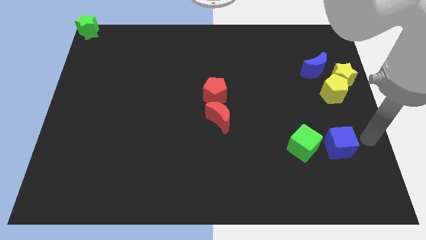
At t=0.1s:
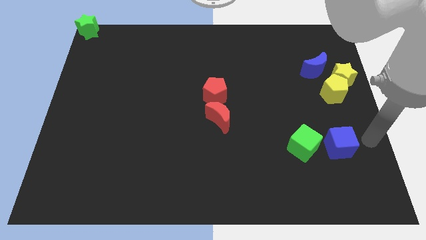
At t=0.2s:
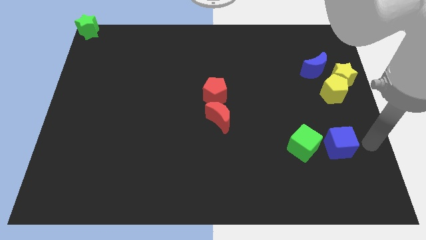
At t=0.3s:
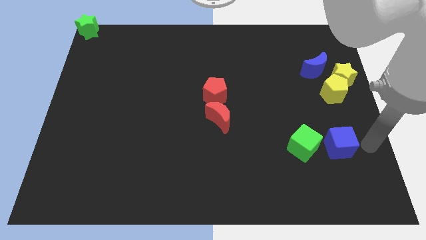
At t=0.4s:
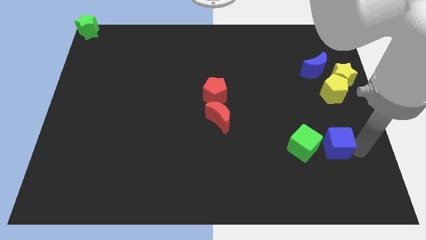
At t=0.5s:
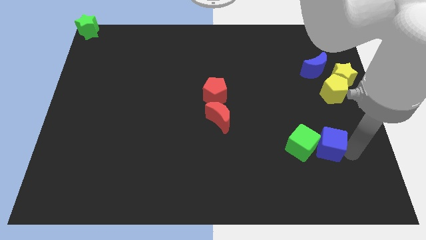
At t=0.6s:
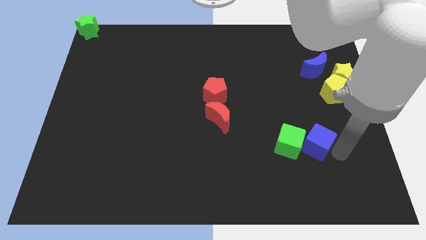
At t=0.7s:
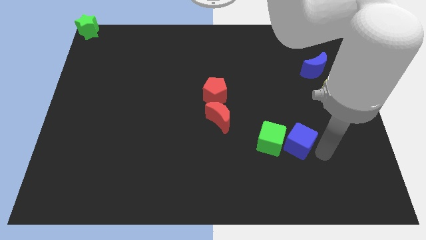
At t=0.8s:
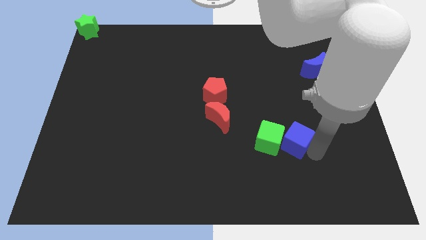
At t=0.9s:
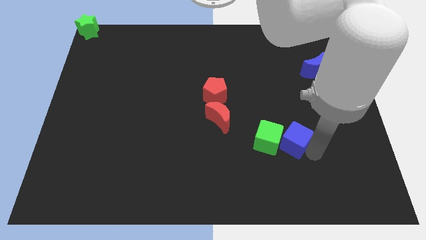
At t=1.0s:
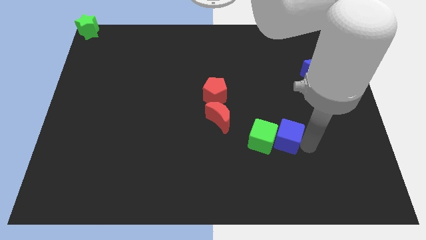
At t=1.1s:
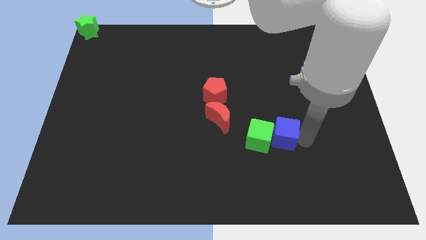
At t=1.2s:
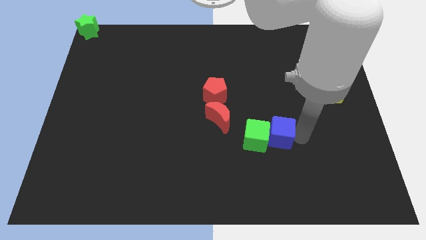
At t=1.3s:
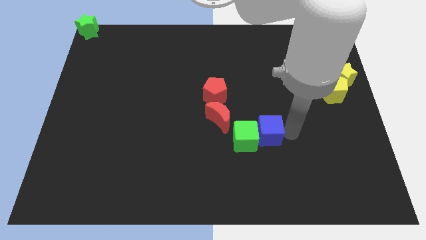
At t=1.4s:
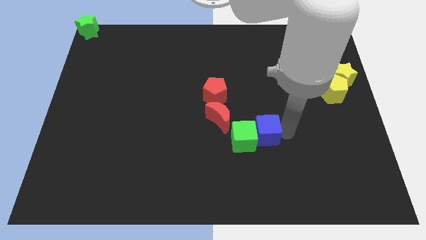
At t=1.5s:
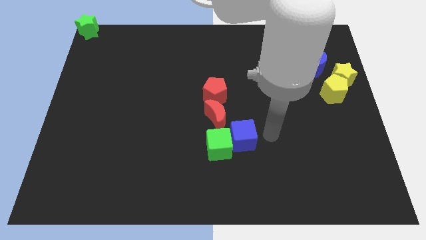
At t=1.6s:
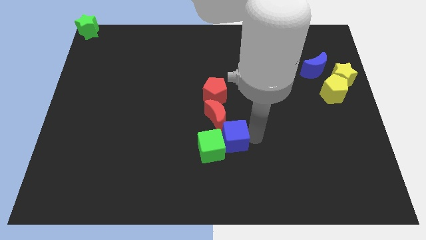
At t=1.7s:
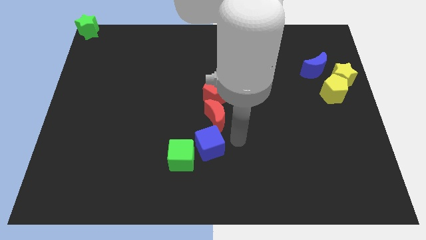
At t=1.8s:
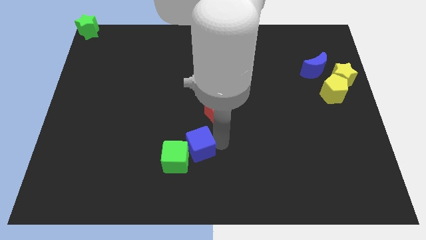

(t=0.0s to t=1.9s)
push the green cube to the left of the board with the blue cube

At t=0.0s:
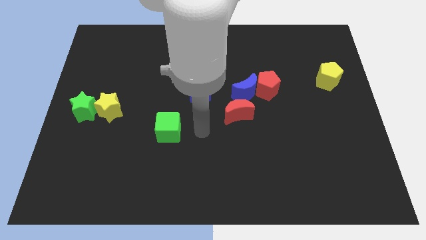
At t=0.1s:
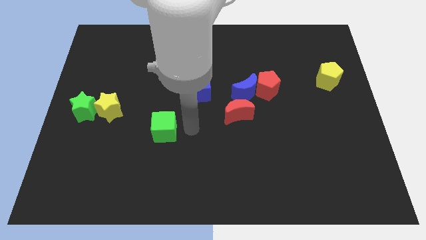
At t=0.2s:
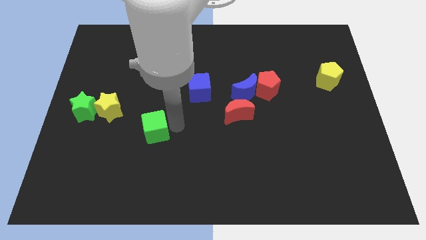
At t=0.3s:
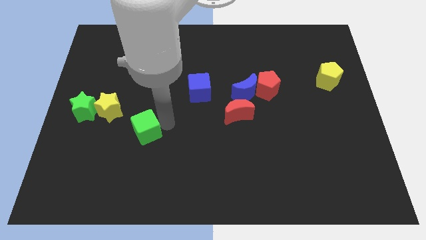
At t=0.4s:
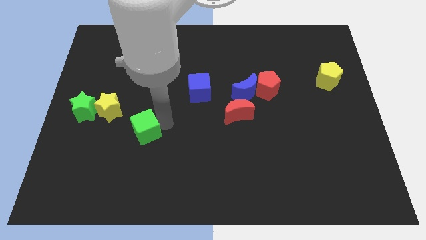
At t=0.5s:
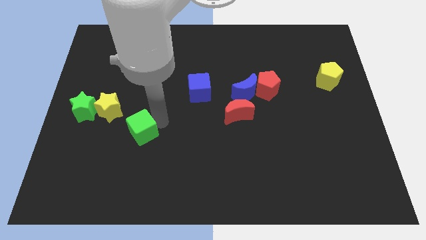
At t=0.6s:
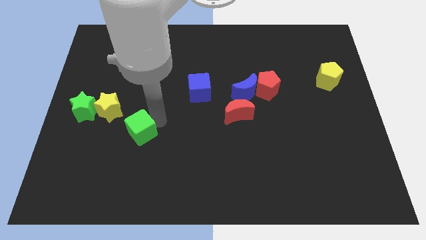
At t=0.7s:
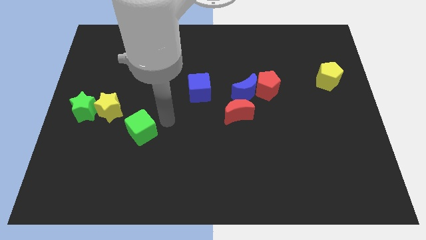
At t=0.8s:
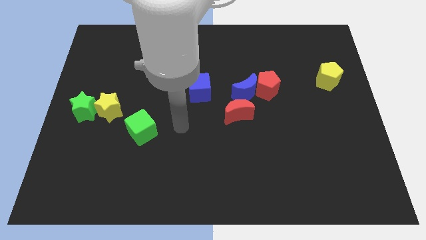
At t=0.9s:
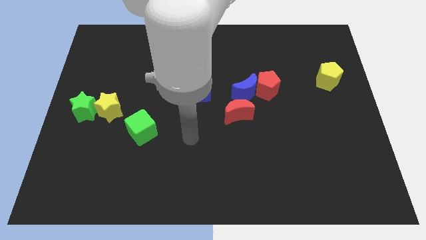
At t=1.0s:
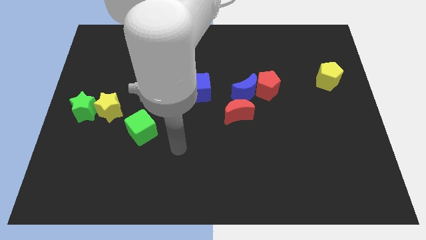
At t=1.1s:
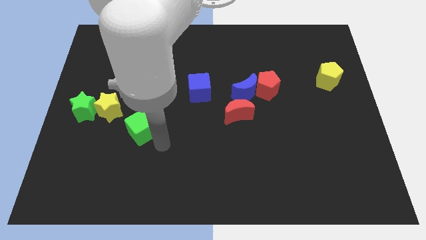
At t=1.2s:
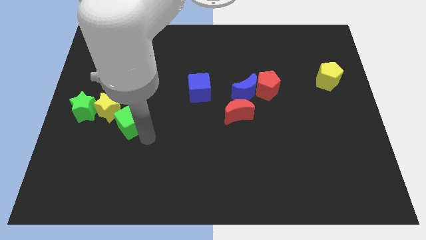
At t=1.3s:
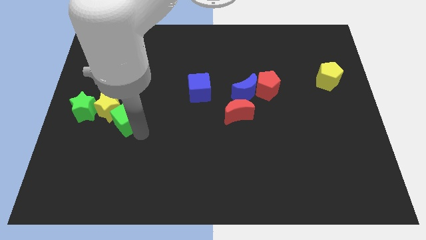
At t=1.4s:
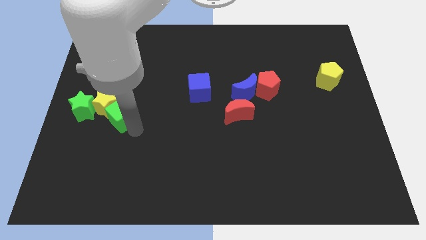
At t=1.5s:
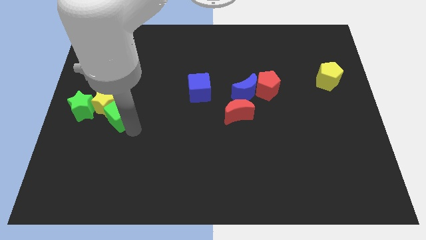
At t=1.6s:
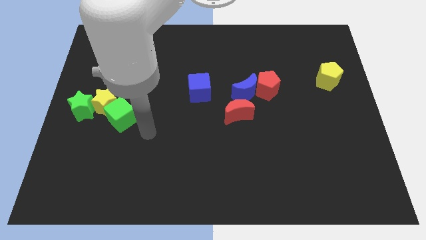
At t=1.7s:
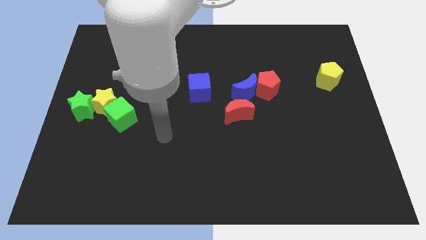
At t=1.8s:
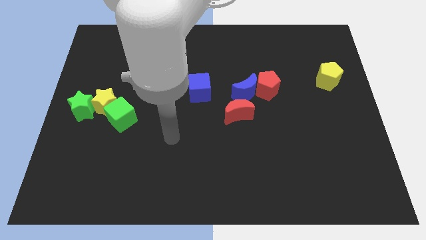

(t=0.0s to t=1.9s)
push the green cube into the yellow star

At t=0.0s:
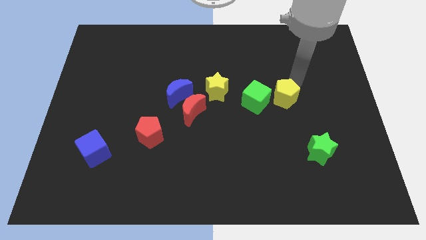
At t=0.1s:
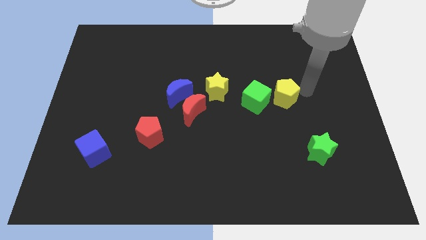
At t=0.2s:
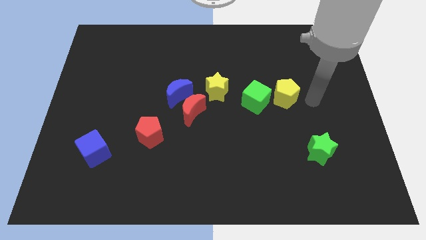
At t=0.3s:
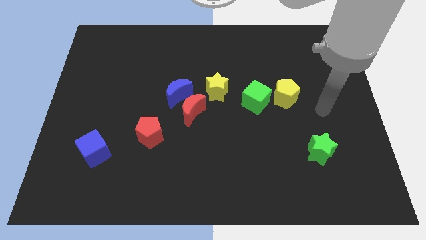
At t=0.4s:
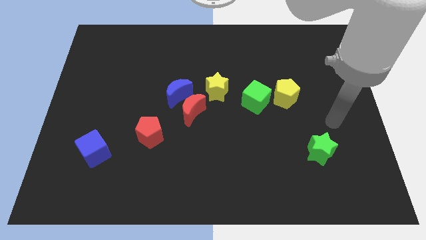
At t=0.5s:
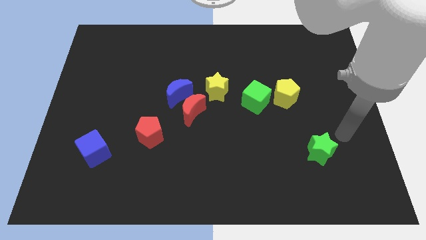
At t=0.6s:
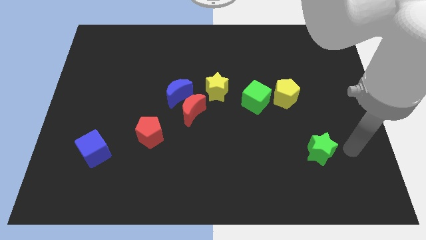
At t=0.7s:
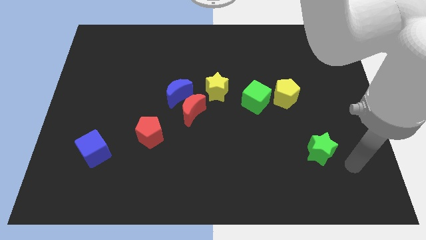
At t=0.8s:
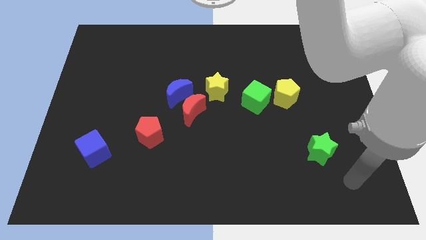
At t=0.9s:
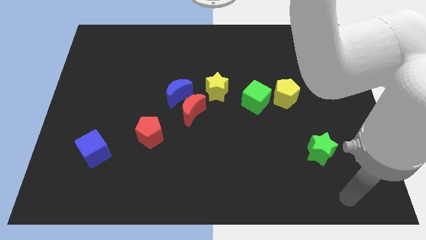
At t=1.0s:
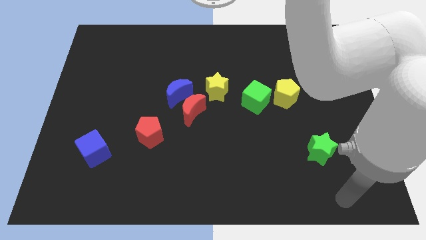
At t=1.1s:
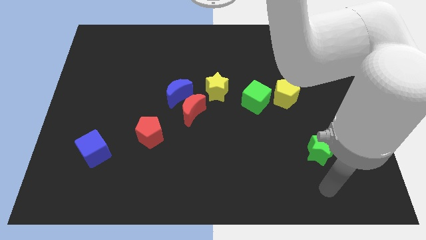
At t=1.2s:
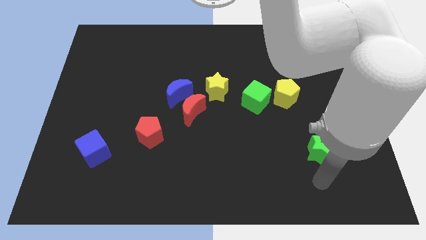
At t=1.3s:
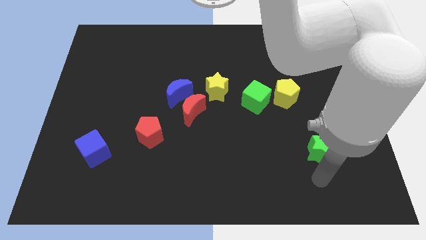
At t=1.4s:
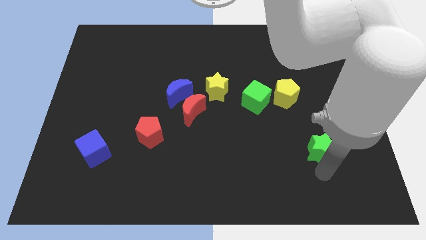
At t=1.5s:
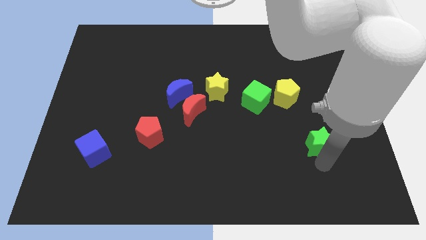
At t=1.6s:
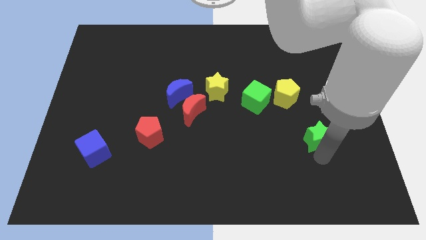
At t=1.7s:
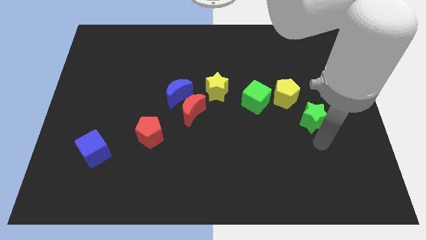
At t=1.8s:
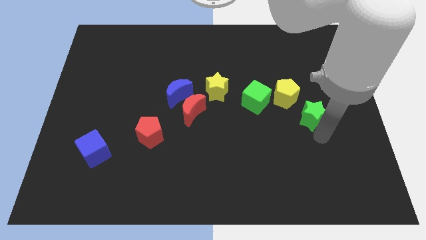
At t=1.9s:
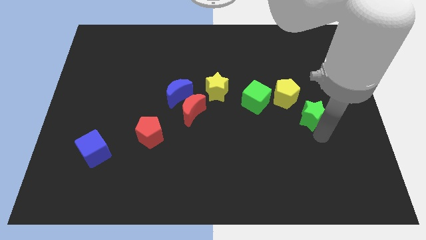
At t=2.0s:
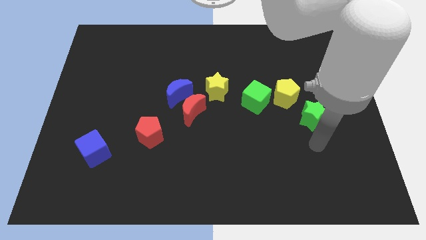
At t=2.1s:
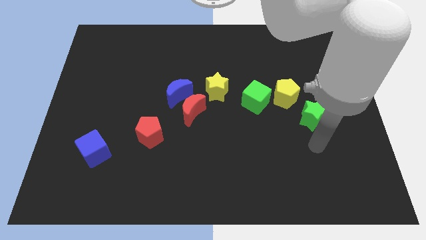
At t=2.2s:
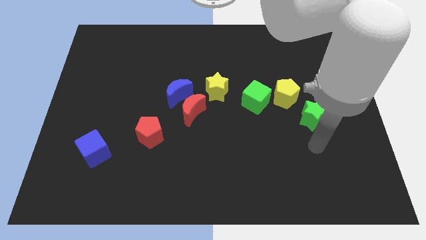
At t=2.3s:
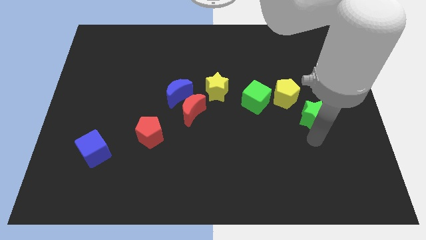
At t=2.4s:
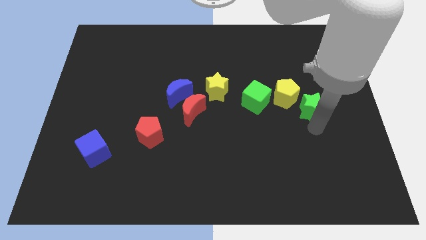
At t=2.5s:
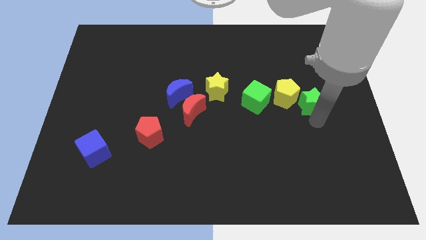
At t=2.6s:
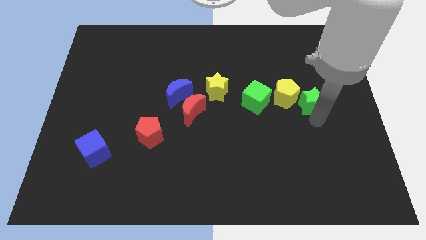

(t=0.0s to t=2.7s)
move the green star to the right of yellow pentagon

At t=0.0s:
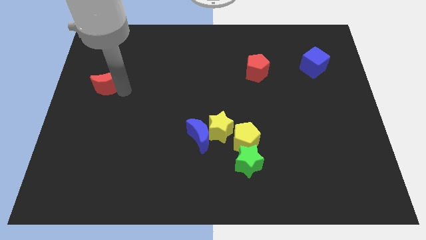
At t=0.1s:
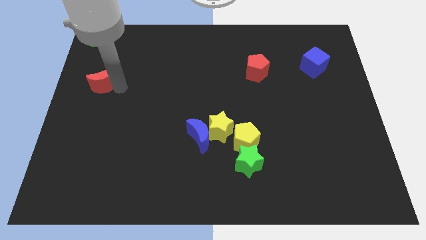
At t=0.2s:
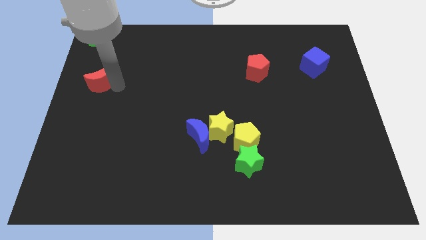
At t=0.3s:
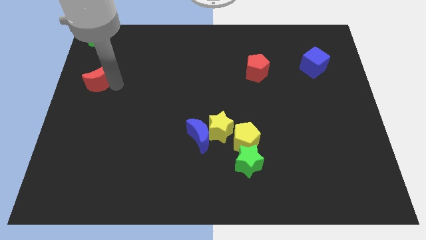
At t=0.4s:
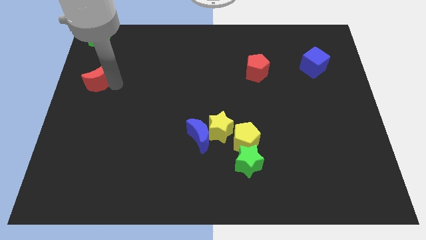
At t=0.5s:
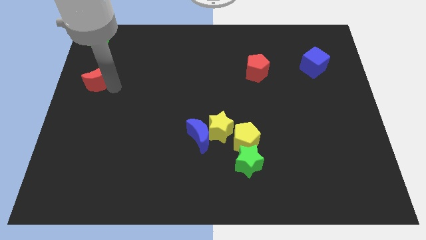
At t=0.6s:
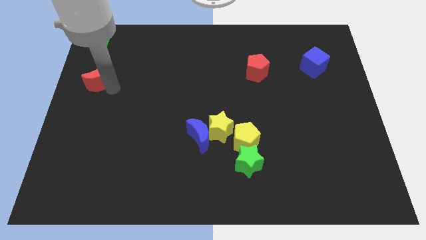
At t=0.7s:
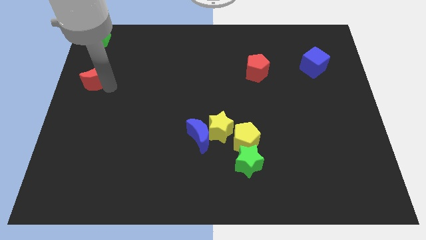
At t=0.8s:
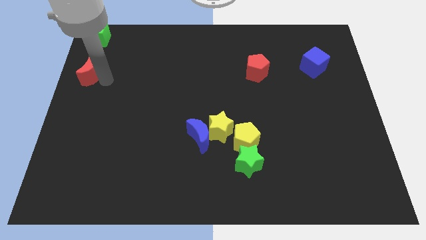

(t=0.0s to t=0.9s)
move the red crescent below the green cube

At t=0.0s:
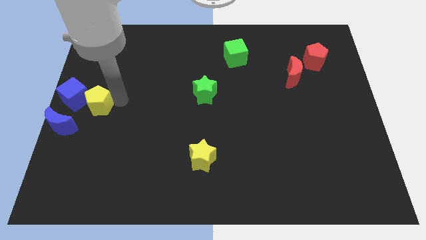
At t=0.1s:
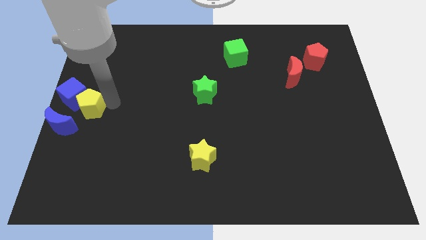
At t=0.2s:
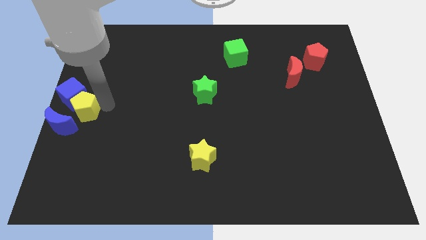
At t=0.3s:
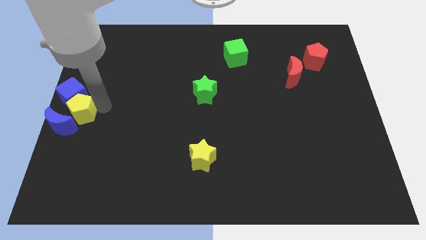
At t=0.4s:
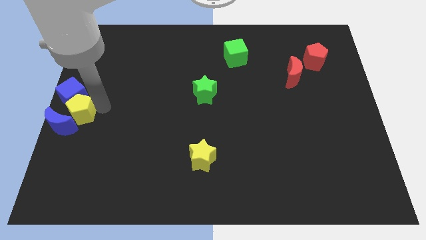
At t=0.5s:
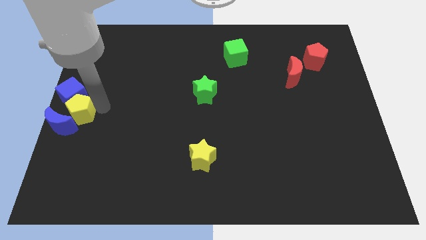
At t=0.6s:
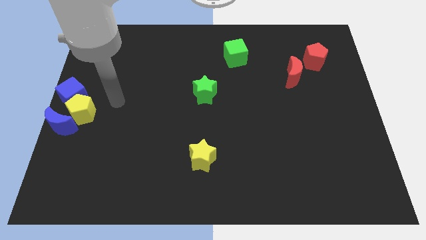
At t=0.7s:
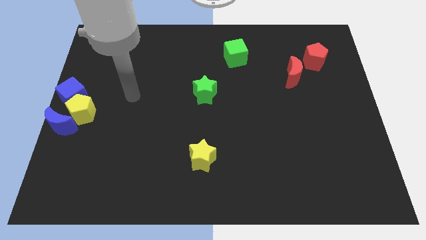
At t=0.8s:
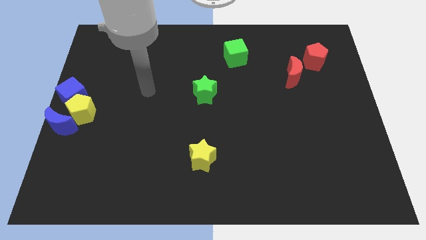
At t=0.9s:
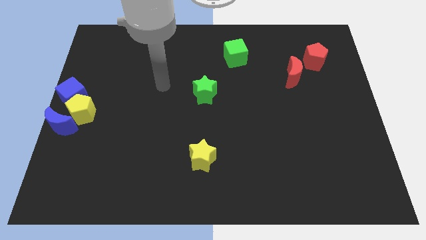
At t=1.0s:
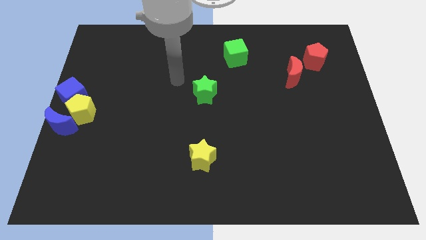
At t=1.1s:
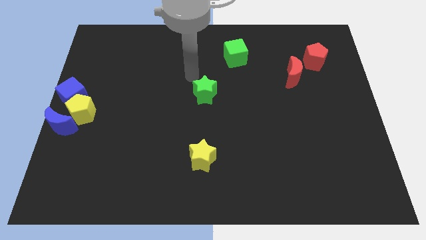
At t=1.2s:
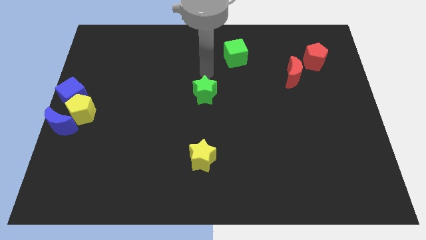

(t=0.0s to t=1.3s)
move the yellow pentagon close to the blue blocks

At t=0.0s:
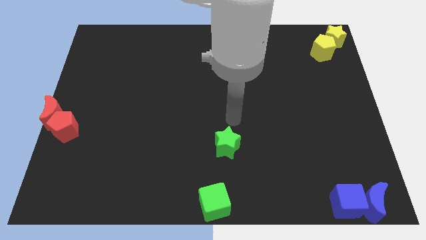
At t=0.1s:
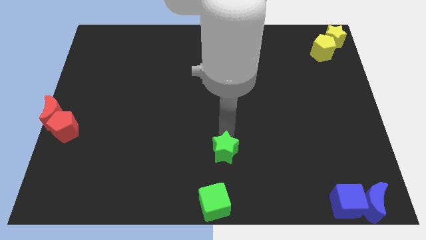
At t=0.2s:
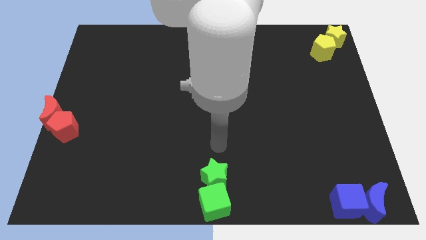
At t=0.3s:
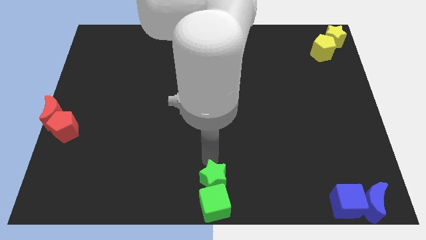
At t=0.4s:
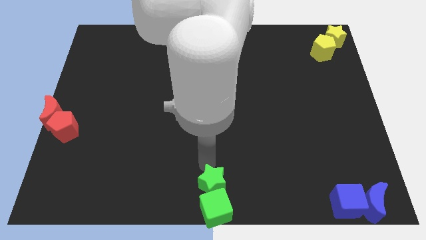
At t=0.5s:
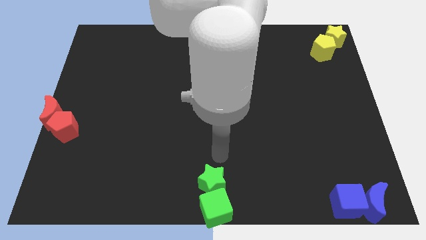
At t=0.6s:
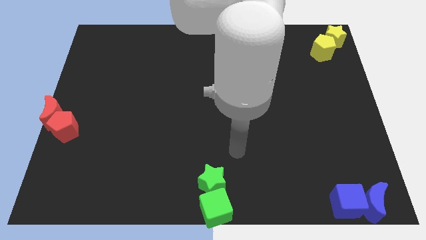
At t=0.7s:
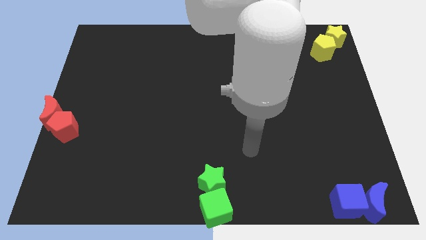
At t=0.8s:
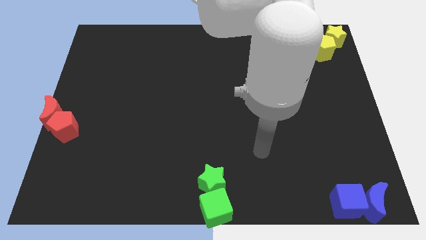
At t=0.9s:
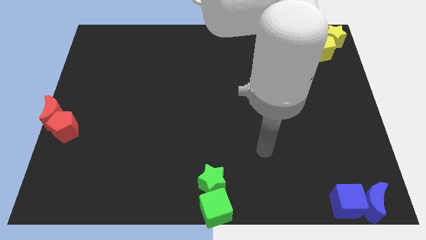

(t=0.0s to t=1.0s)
group up the green blocks at the bottom center of the board
